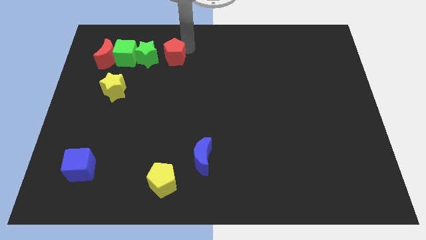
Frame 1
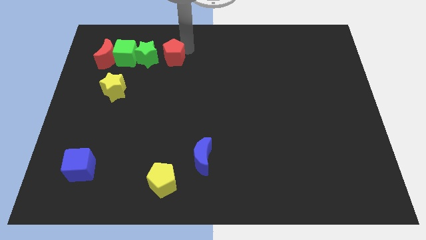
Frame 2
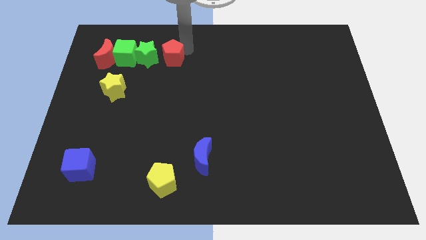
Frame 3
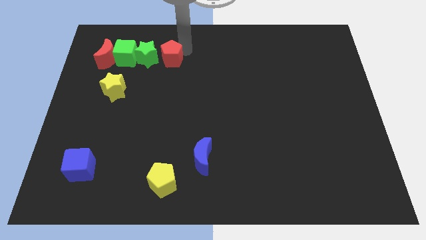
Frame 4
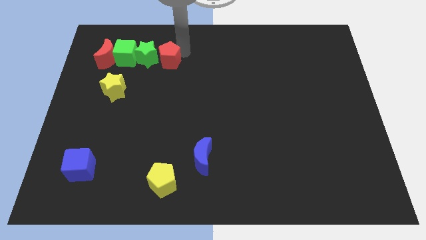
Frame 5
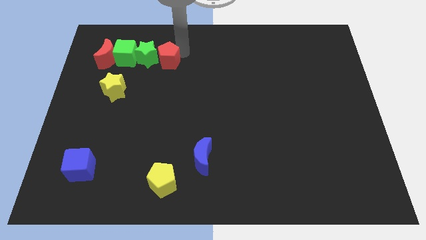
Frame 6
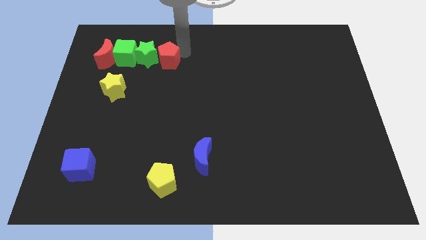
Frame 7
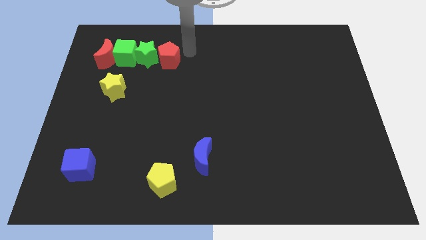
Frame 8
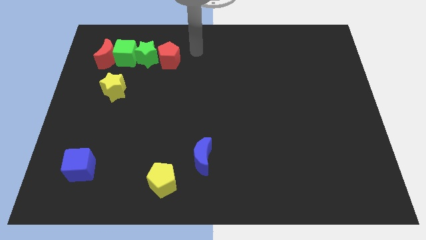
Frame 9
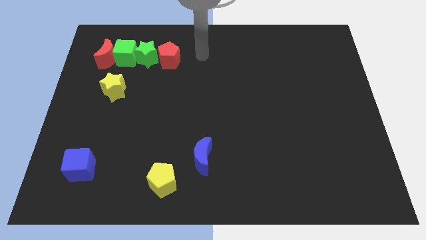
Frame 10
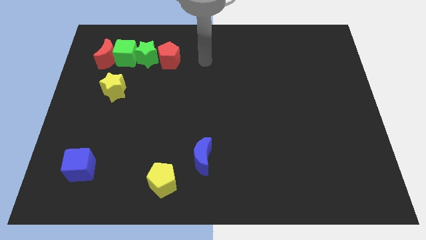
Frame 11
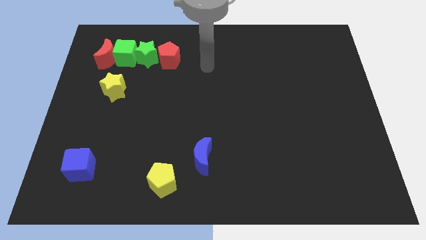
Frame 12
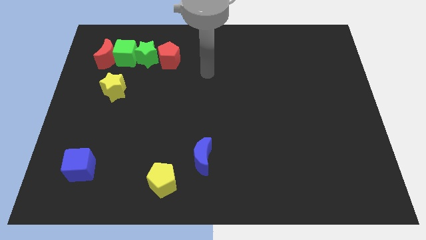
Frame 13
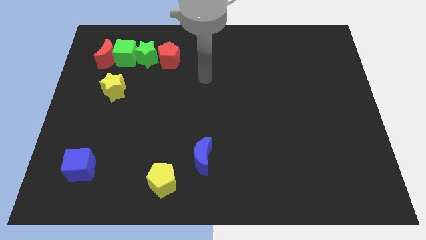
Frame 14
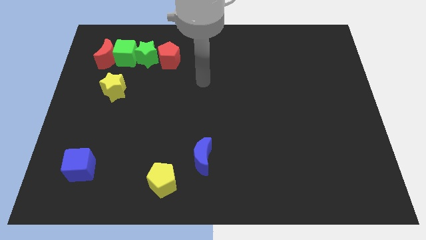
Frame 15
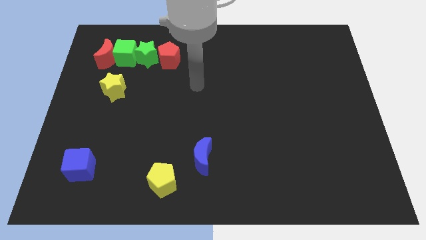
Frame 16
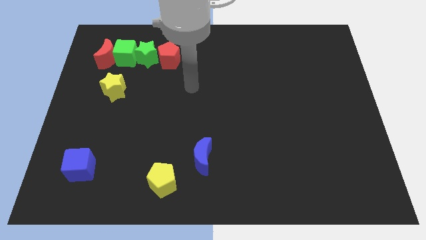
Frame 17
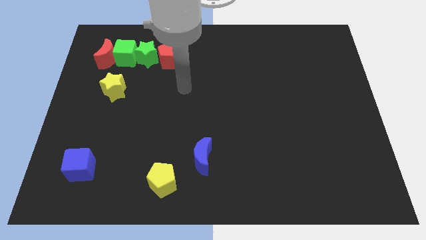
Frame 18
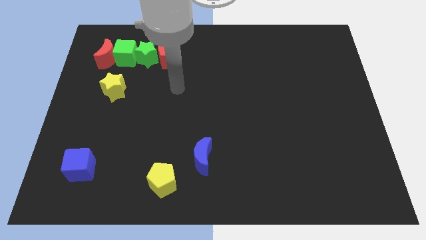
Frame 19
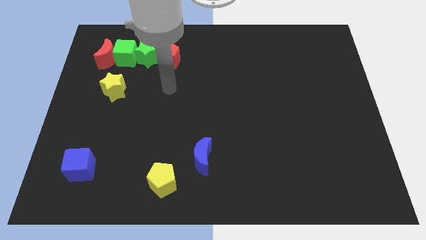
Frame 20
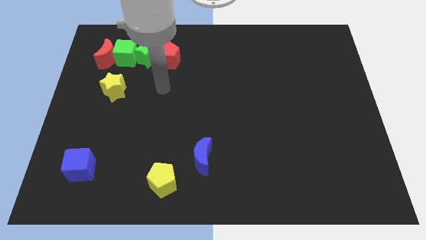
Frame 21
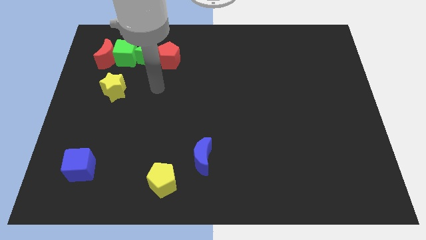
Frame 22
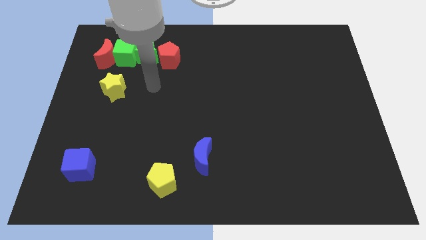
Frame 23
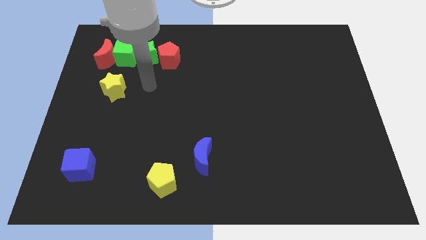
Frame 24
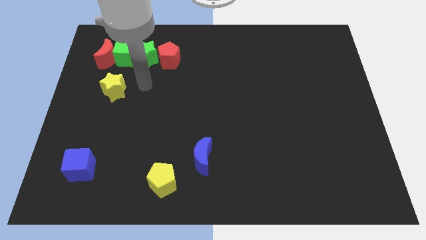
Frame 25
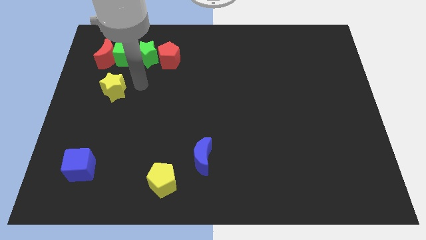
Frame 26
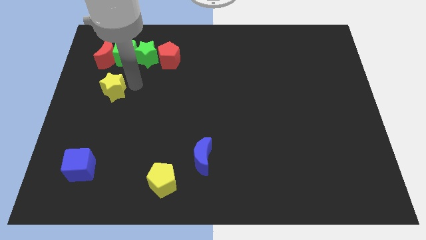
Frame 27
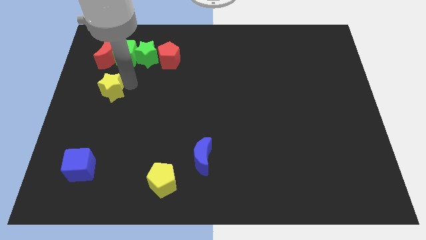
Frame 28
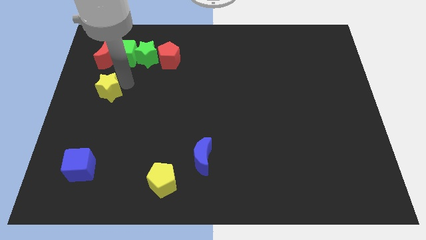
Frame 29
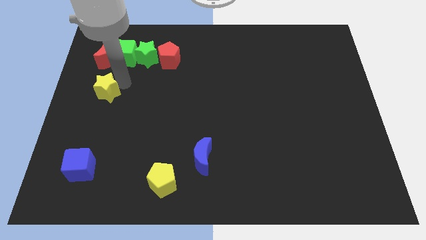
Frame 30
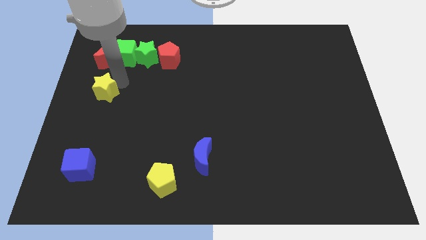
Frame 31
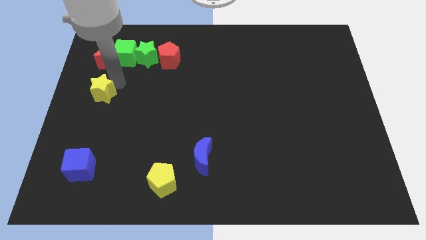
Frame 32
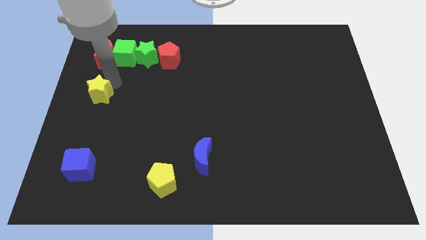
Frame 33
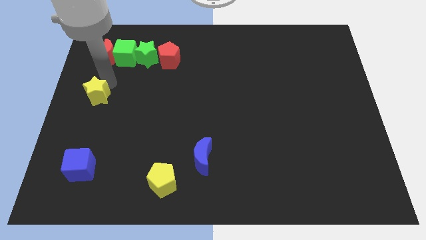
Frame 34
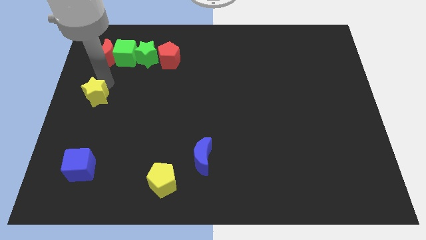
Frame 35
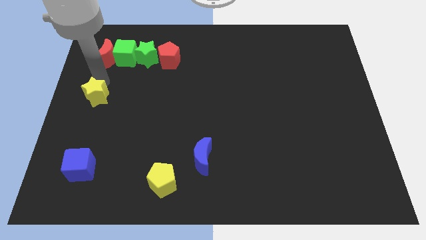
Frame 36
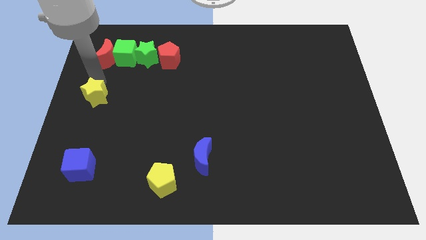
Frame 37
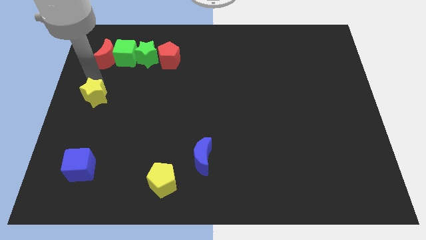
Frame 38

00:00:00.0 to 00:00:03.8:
move the yellow star to the bottom of the red moon

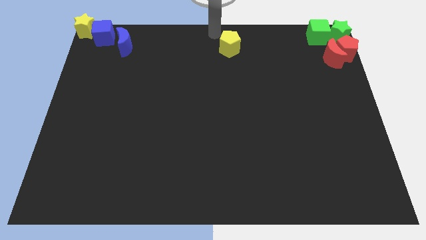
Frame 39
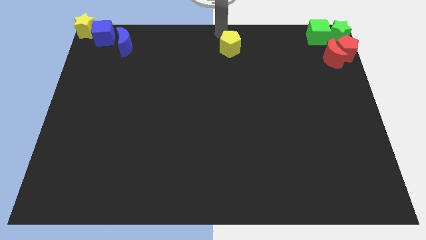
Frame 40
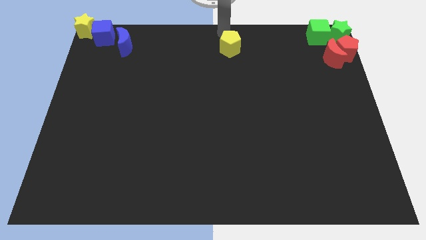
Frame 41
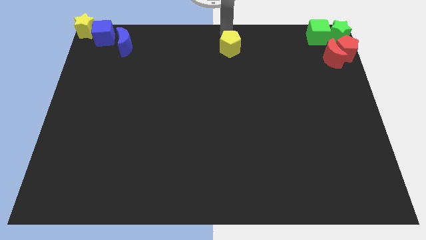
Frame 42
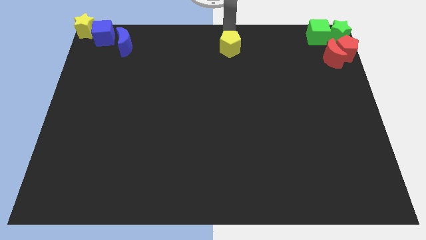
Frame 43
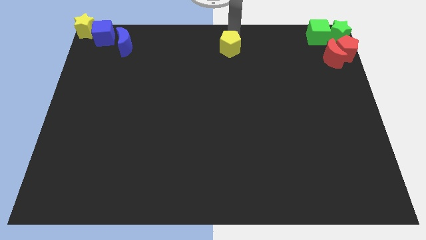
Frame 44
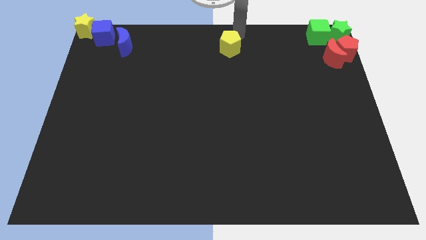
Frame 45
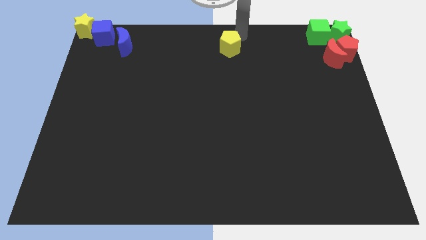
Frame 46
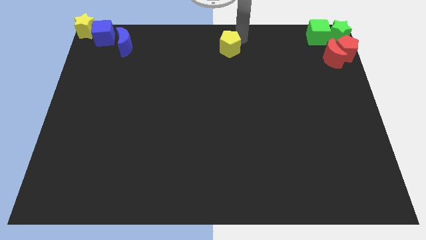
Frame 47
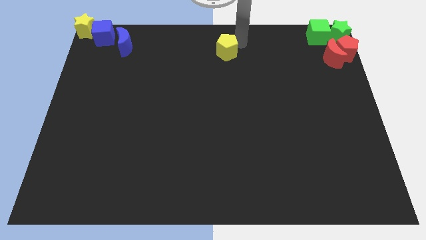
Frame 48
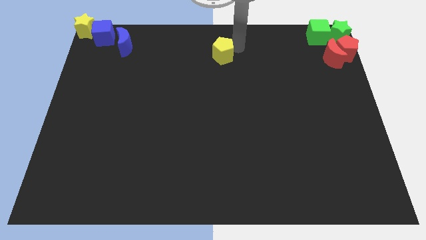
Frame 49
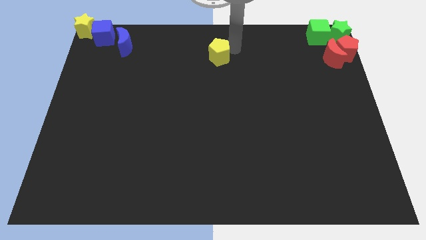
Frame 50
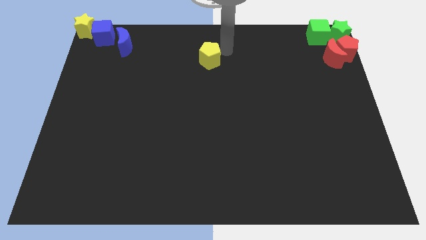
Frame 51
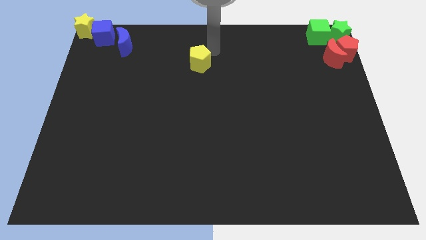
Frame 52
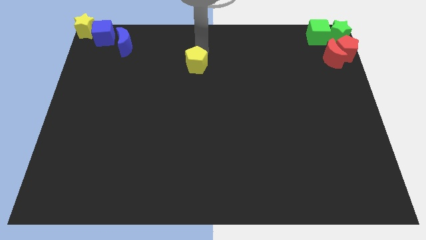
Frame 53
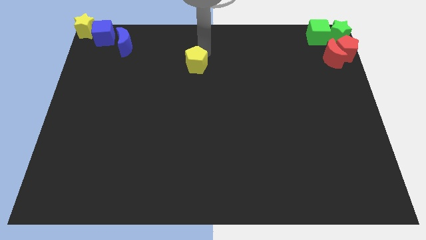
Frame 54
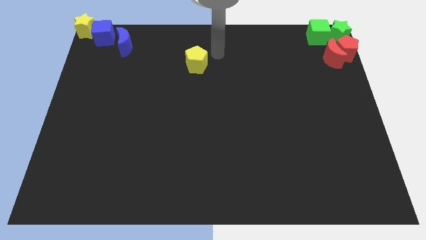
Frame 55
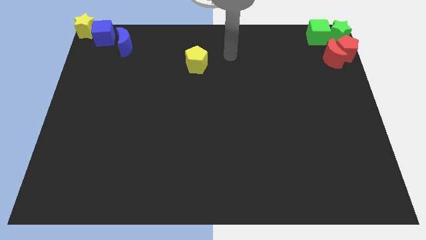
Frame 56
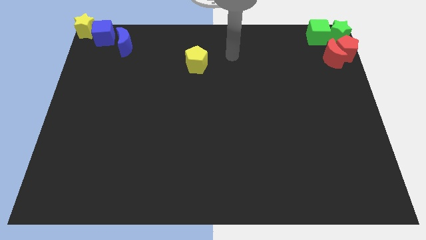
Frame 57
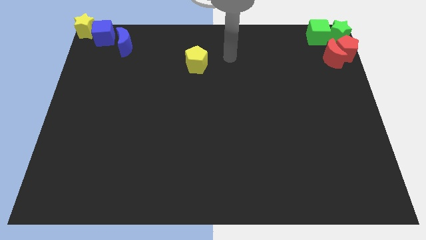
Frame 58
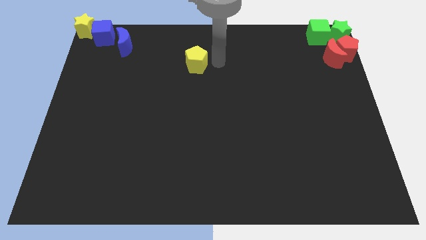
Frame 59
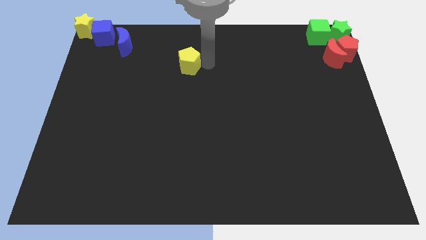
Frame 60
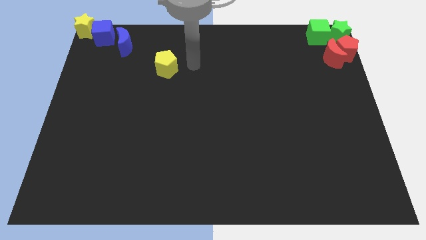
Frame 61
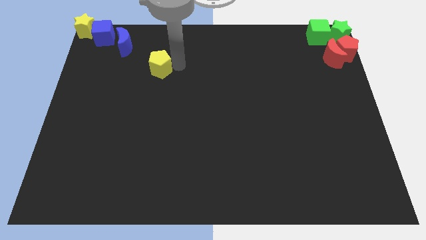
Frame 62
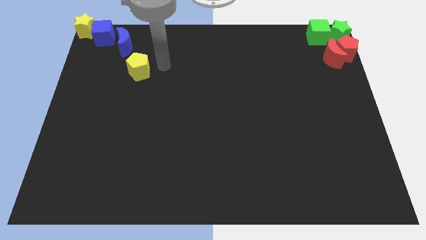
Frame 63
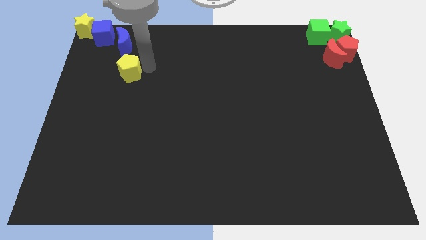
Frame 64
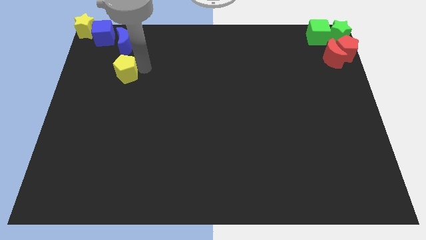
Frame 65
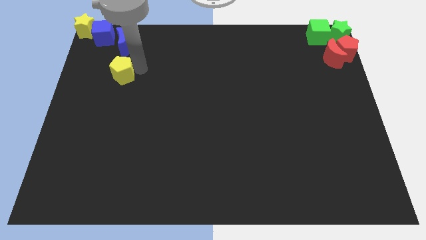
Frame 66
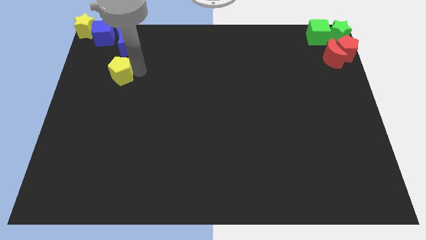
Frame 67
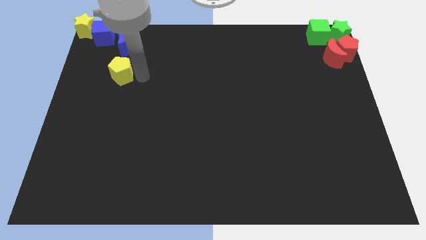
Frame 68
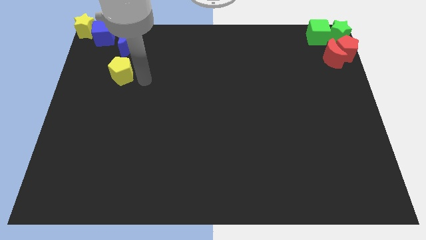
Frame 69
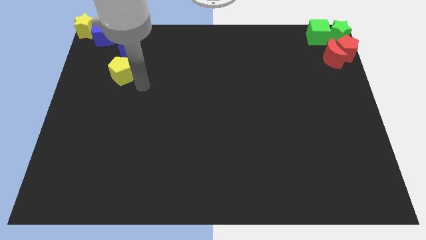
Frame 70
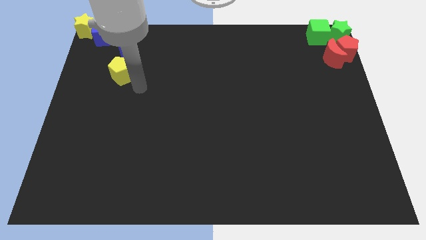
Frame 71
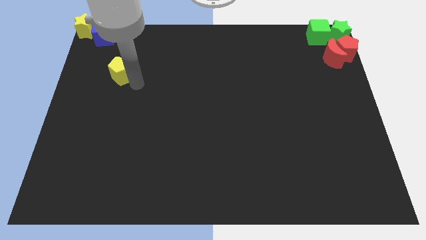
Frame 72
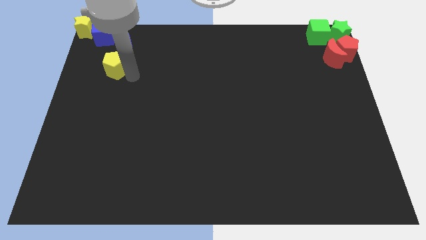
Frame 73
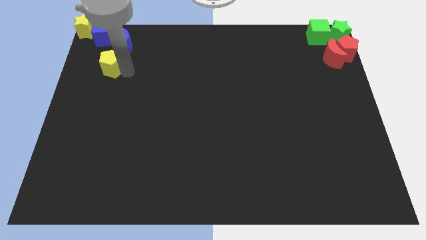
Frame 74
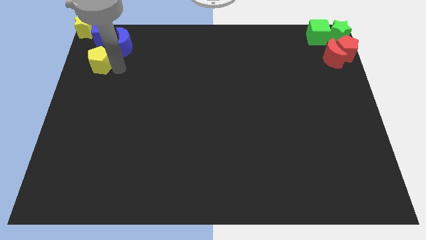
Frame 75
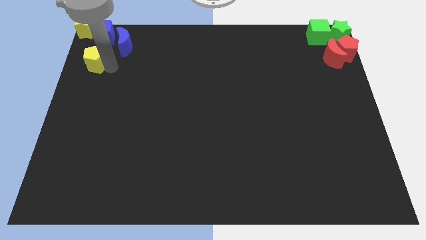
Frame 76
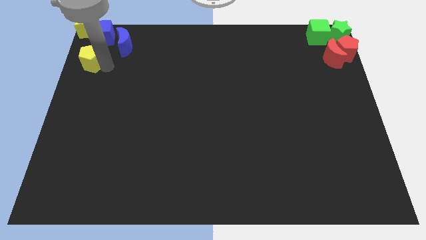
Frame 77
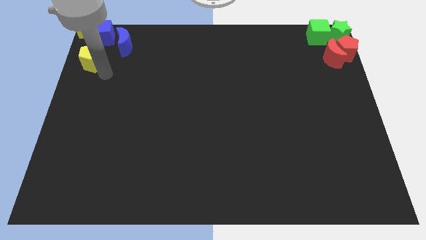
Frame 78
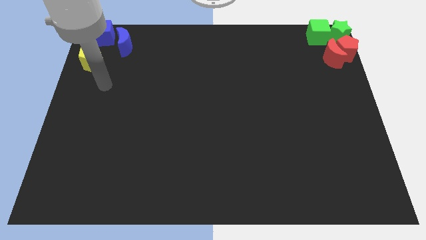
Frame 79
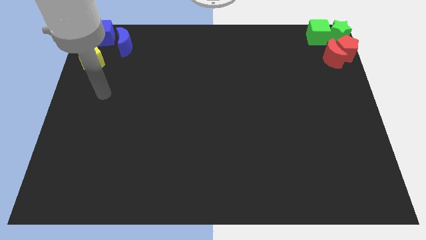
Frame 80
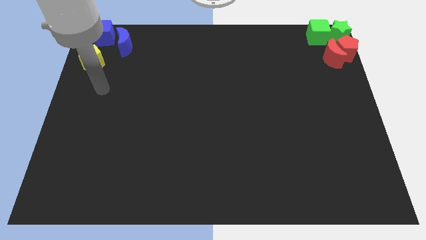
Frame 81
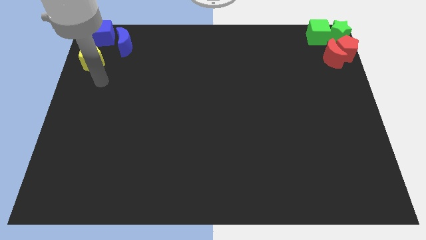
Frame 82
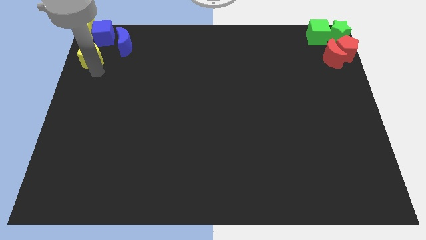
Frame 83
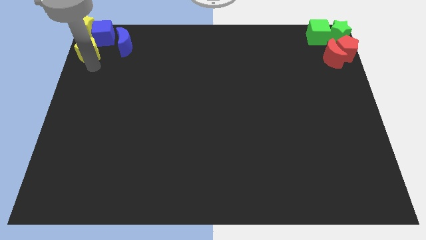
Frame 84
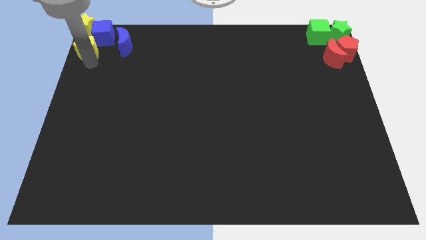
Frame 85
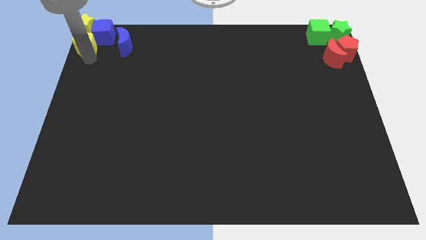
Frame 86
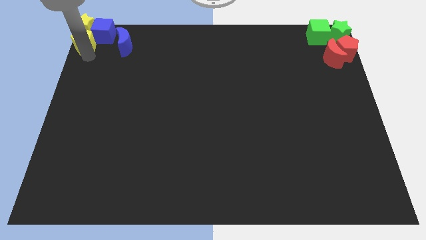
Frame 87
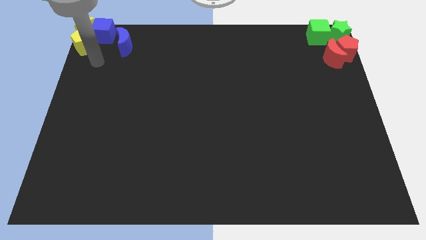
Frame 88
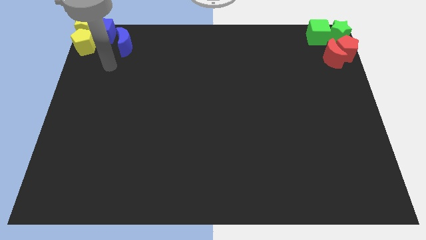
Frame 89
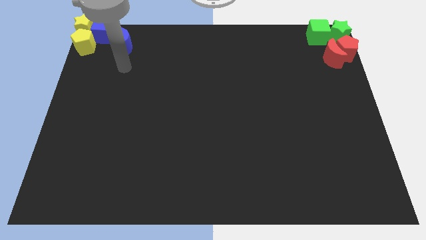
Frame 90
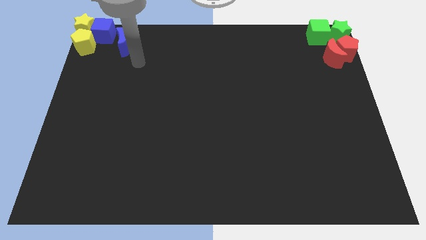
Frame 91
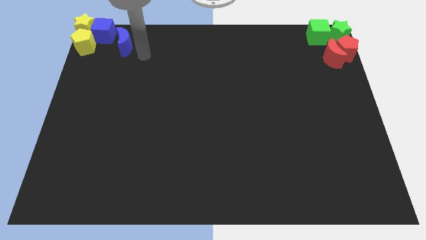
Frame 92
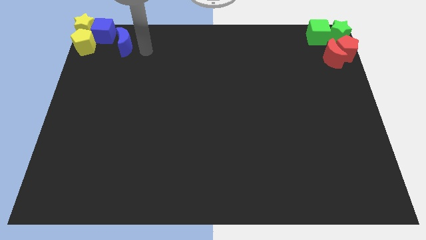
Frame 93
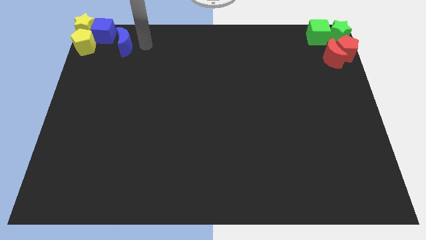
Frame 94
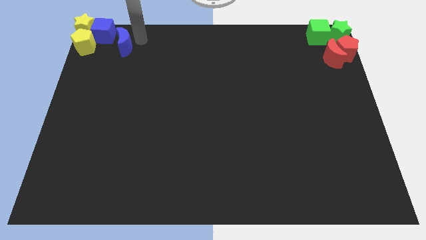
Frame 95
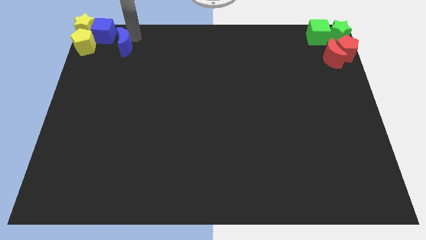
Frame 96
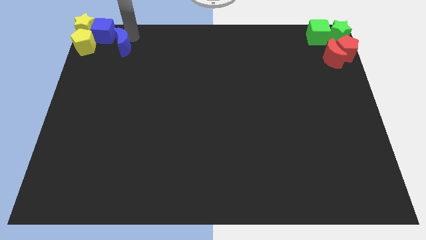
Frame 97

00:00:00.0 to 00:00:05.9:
move the yellow pentagon into the yellow star
